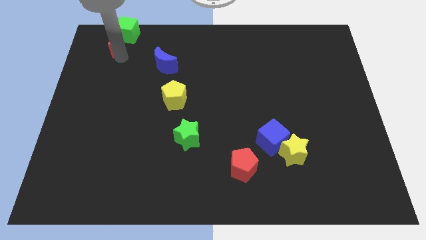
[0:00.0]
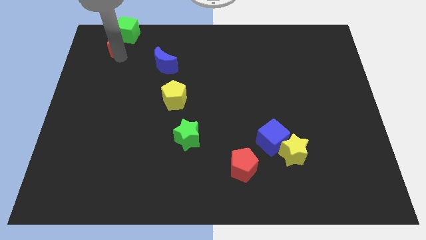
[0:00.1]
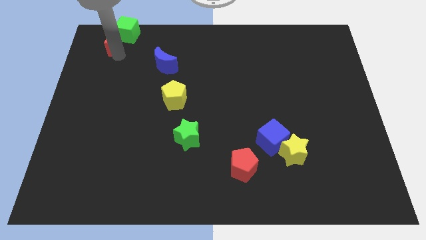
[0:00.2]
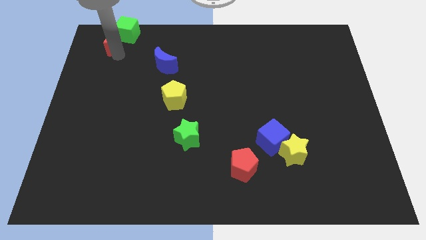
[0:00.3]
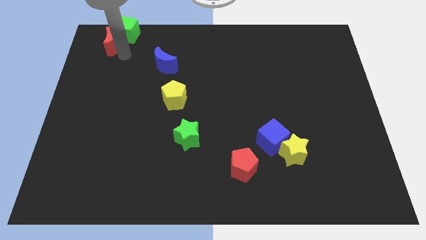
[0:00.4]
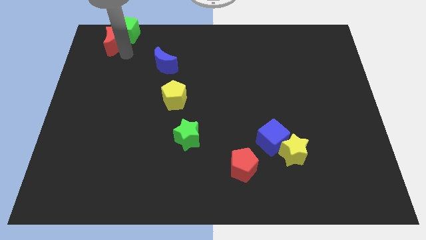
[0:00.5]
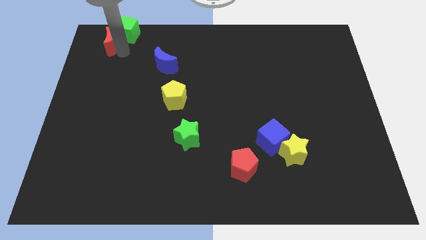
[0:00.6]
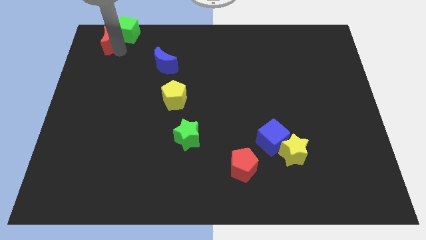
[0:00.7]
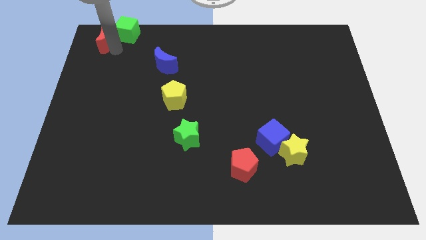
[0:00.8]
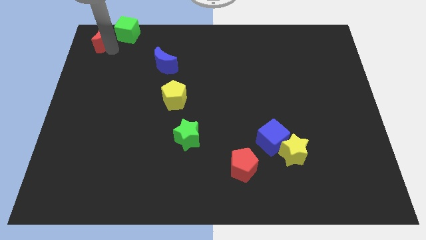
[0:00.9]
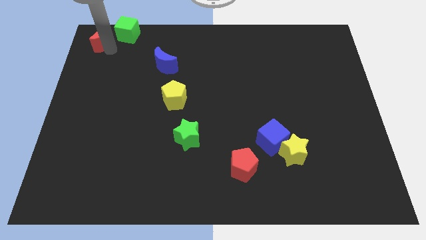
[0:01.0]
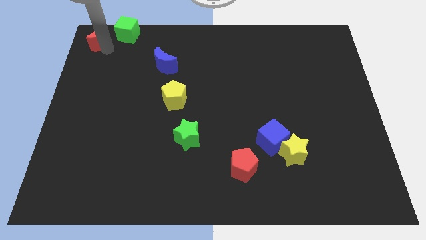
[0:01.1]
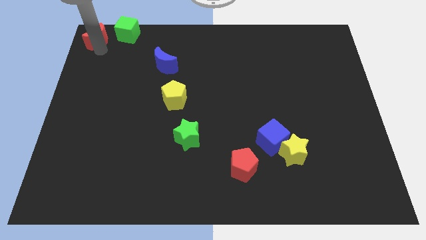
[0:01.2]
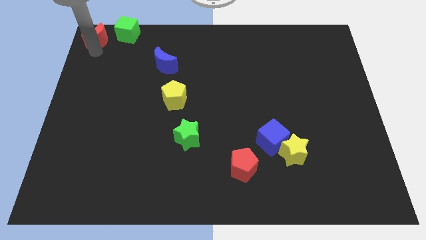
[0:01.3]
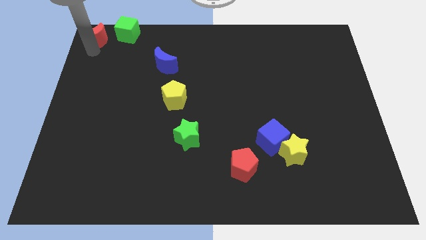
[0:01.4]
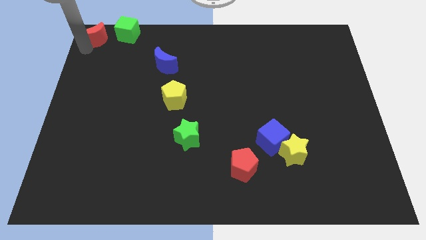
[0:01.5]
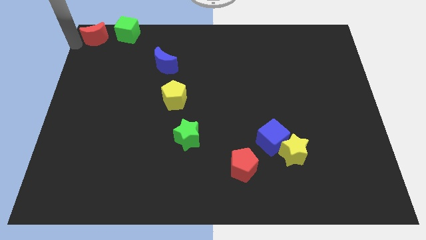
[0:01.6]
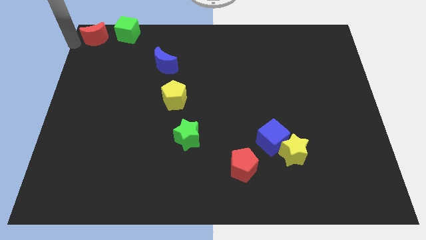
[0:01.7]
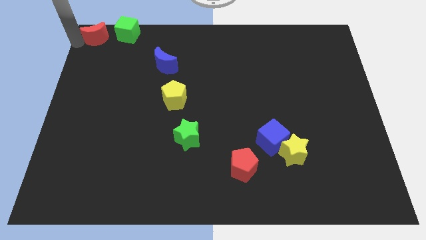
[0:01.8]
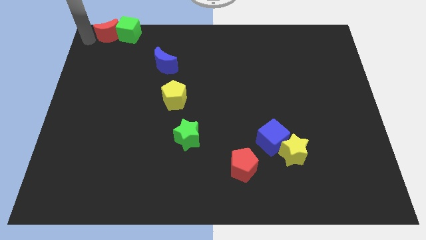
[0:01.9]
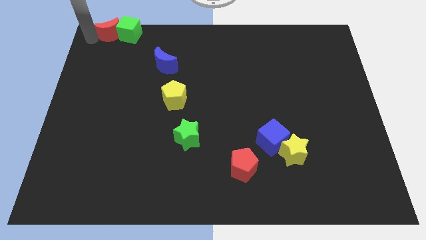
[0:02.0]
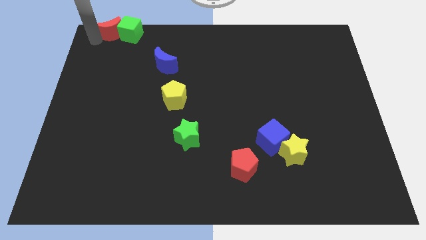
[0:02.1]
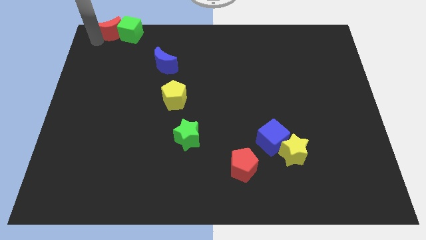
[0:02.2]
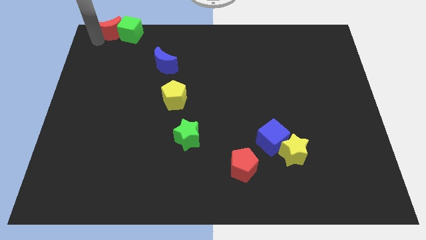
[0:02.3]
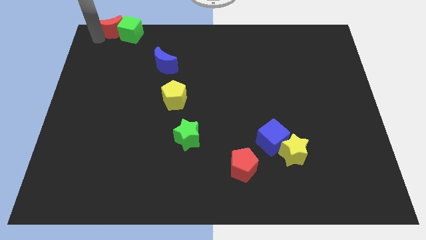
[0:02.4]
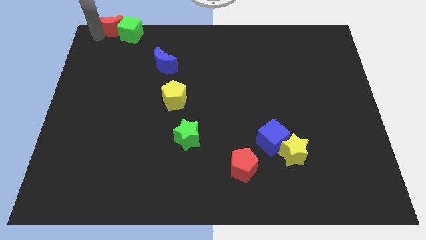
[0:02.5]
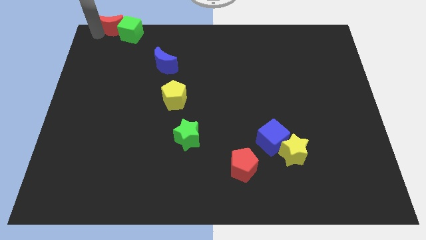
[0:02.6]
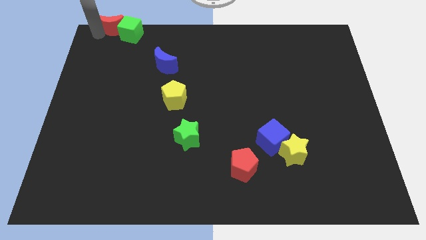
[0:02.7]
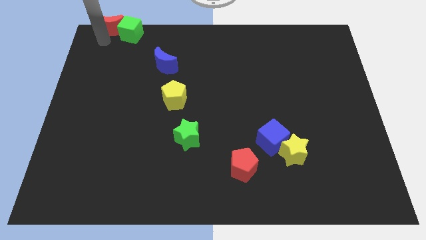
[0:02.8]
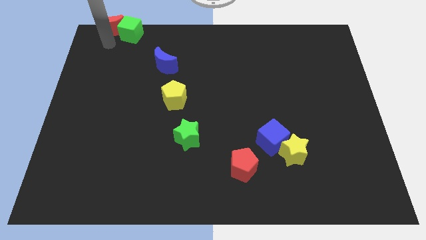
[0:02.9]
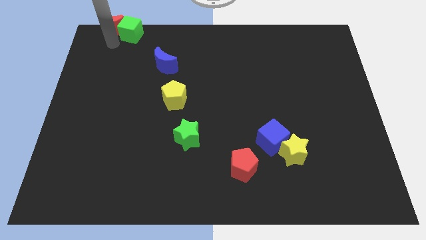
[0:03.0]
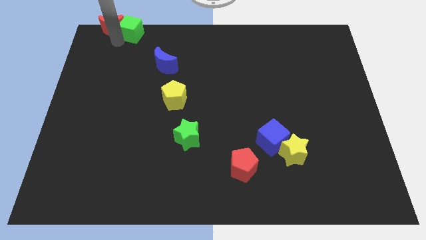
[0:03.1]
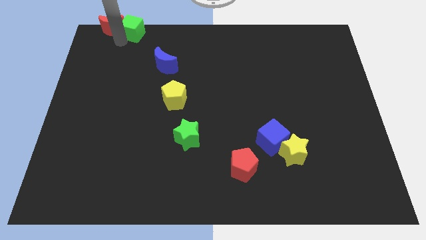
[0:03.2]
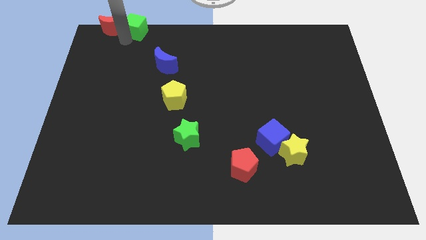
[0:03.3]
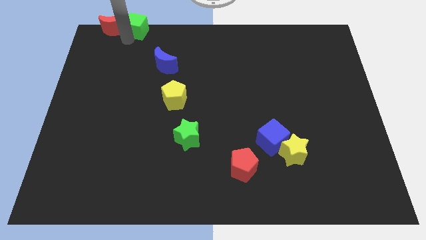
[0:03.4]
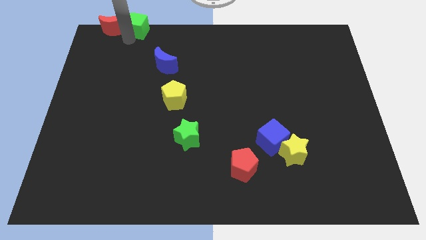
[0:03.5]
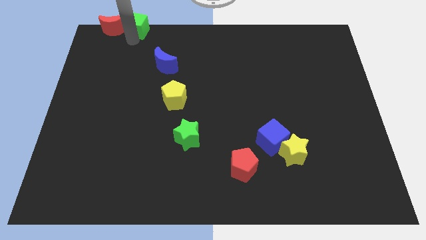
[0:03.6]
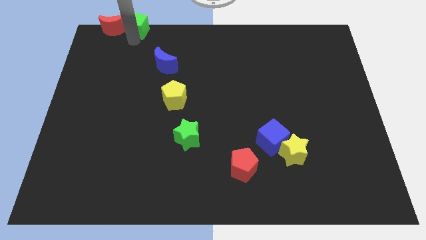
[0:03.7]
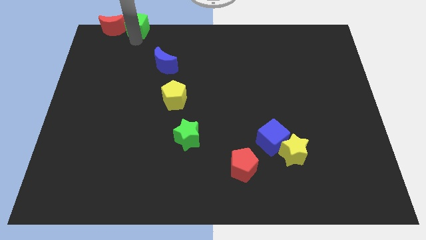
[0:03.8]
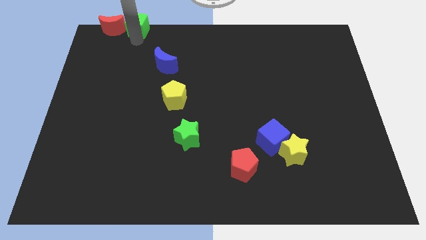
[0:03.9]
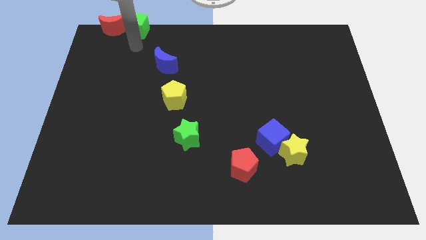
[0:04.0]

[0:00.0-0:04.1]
place the red crescent on the top left of the board

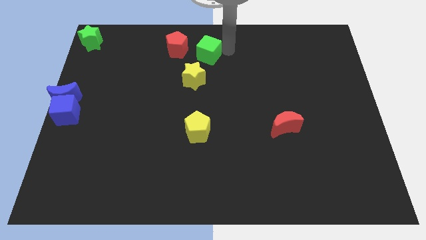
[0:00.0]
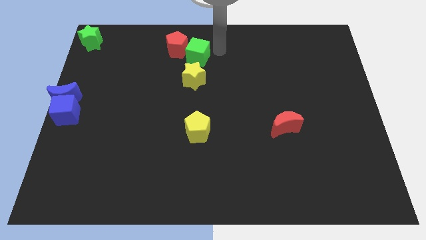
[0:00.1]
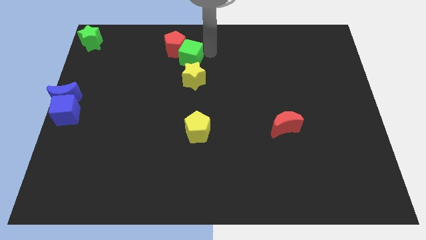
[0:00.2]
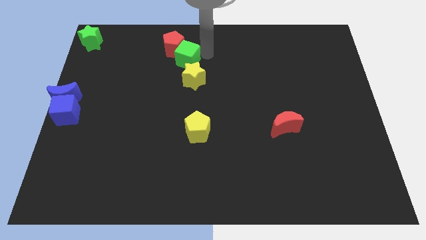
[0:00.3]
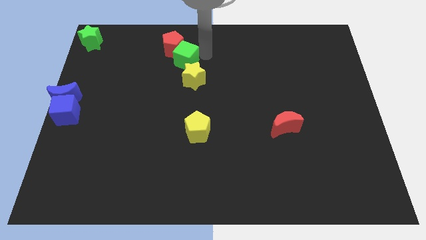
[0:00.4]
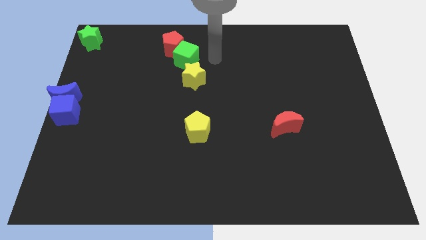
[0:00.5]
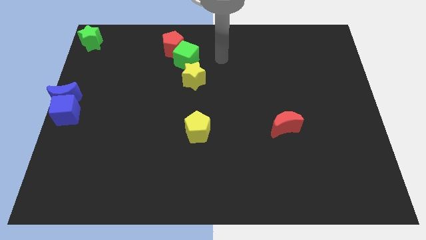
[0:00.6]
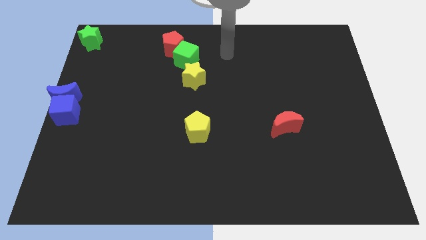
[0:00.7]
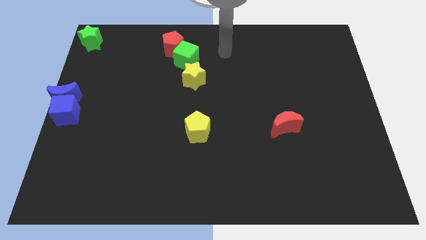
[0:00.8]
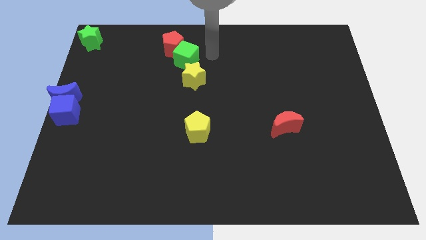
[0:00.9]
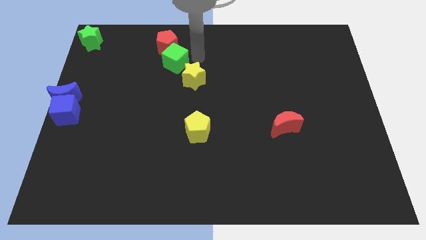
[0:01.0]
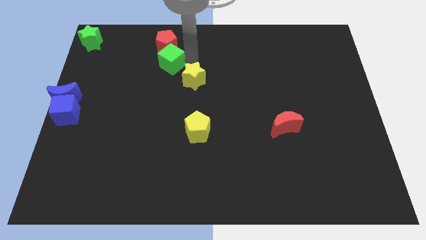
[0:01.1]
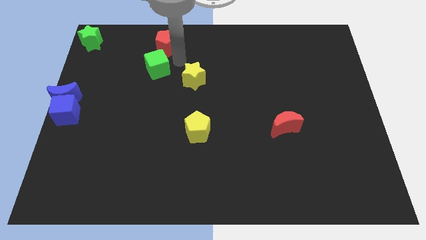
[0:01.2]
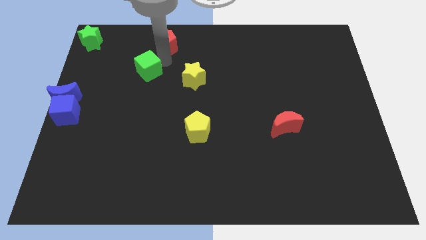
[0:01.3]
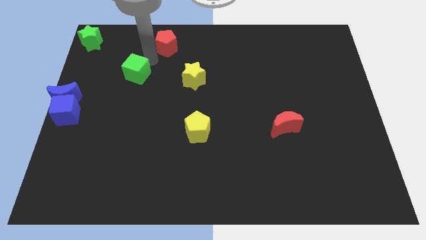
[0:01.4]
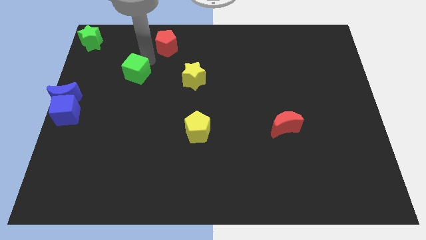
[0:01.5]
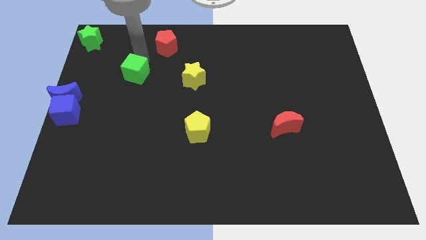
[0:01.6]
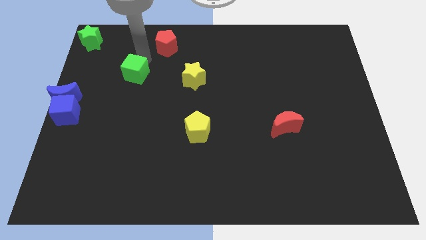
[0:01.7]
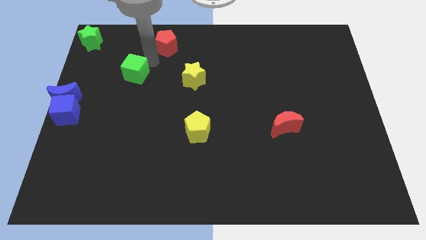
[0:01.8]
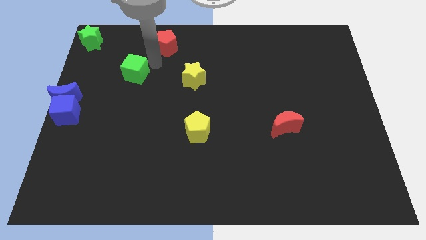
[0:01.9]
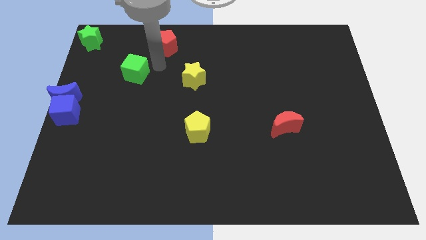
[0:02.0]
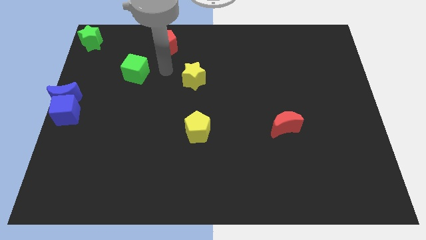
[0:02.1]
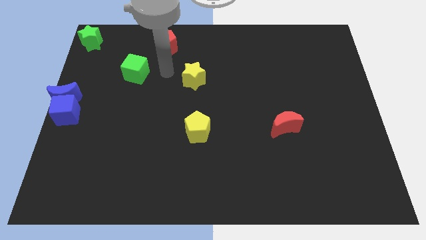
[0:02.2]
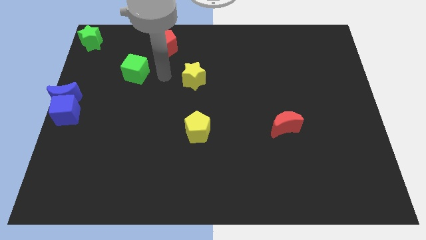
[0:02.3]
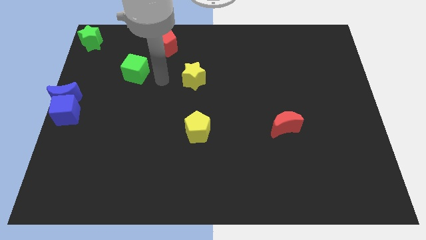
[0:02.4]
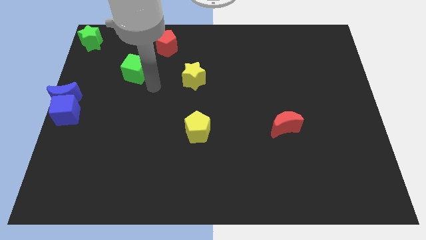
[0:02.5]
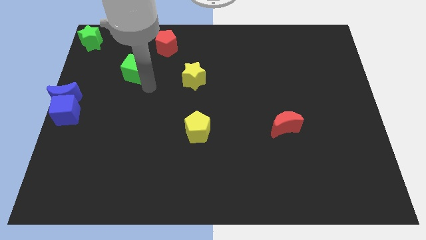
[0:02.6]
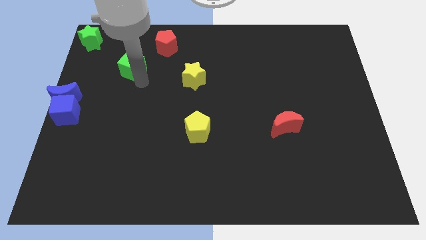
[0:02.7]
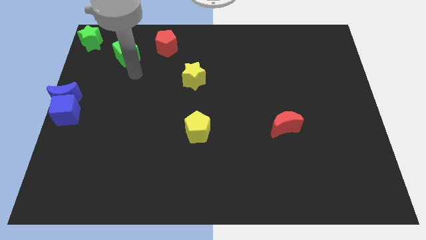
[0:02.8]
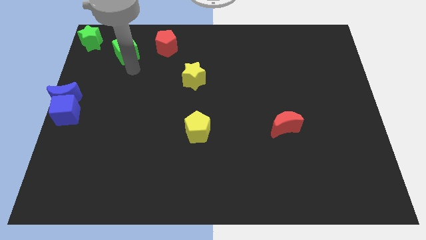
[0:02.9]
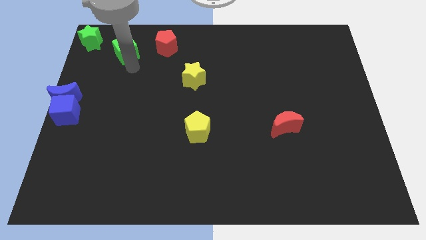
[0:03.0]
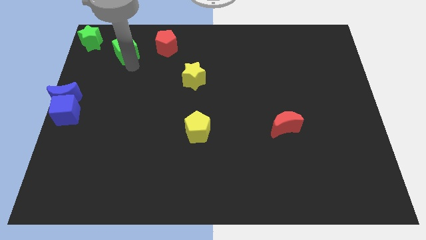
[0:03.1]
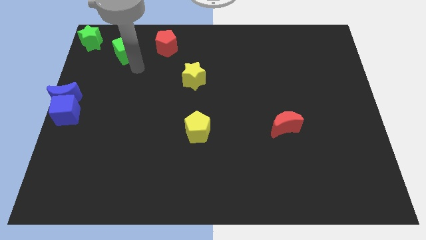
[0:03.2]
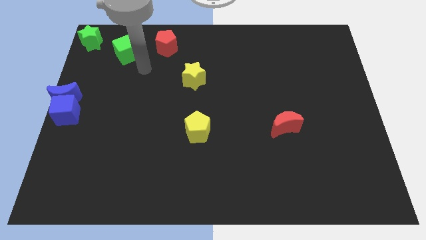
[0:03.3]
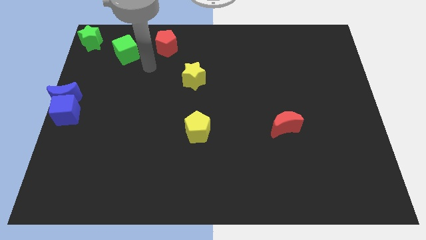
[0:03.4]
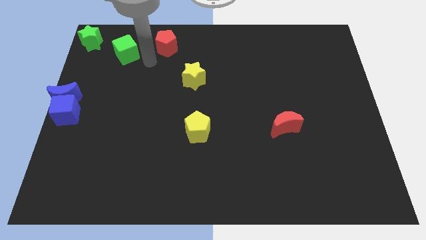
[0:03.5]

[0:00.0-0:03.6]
move the green cube to the left of the red pentagon

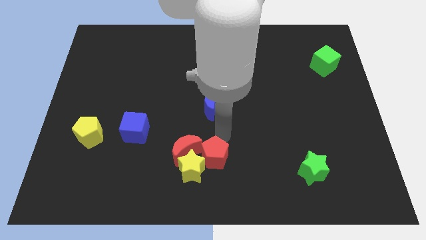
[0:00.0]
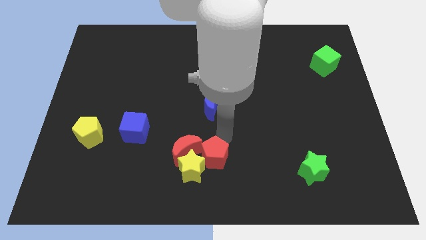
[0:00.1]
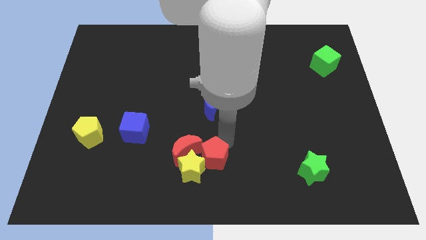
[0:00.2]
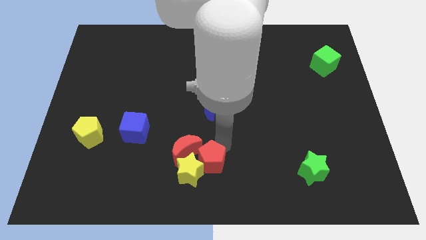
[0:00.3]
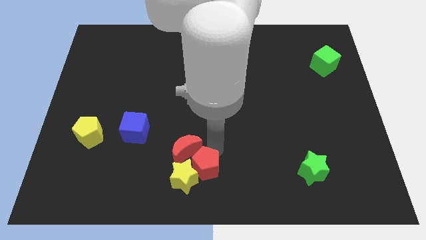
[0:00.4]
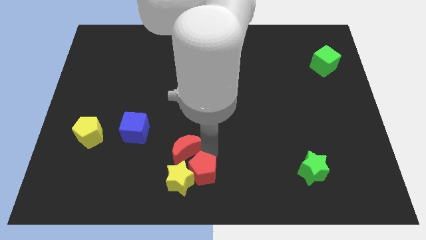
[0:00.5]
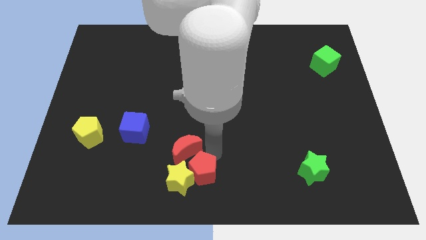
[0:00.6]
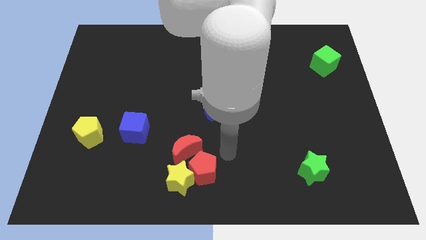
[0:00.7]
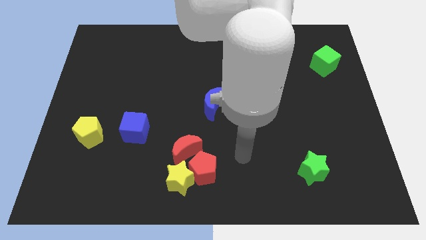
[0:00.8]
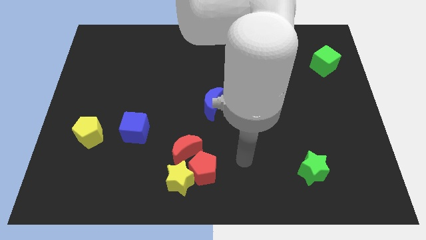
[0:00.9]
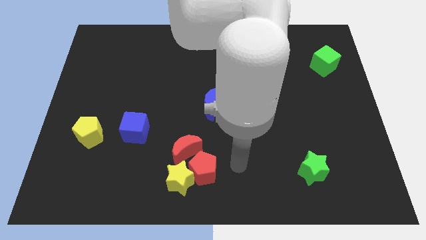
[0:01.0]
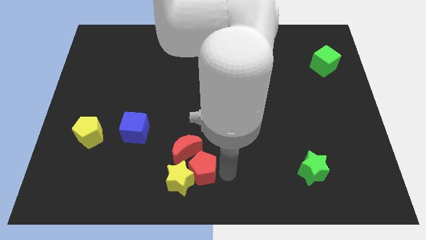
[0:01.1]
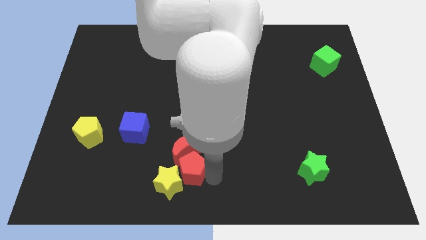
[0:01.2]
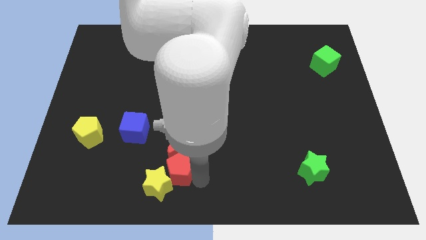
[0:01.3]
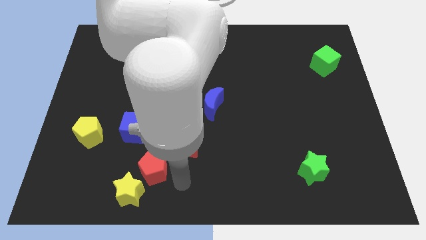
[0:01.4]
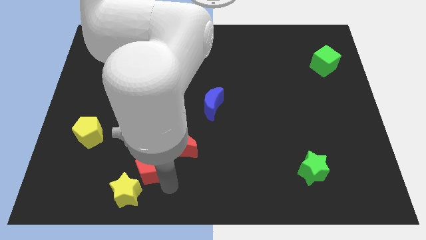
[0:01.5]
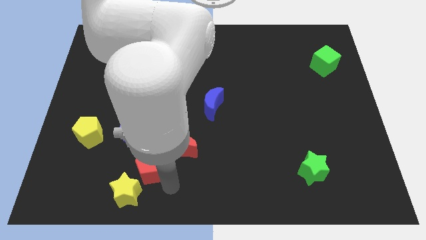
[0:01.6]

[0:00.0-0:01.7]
push the yellow star with the red pentagon towards the bottom left of the board
